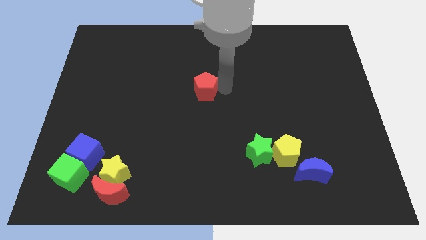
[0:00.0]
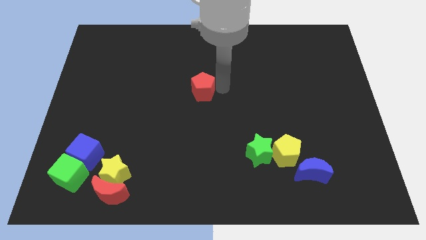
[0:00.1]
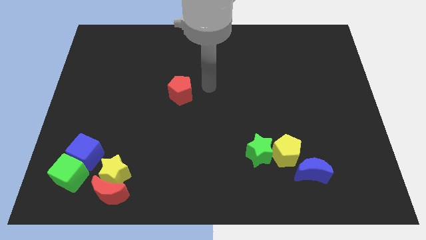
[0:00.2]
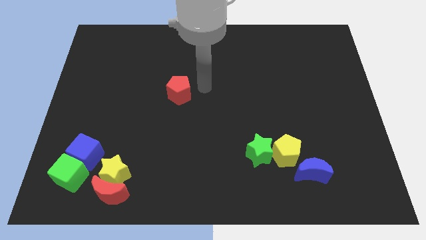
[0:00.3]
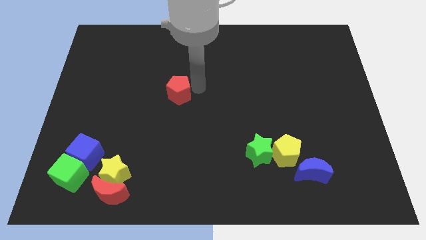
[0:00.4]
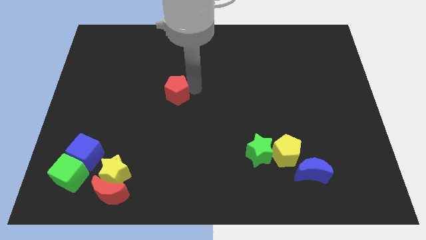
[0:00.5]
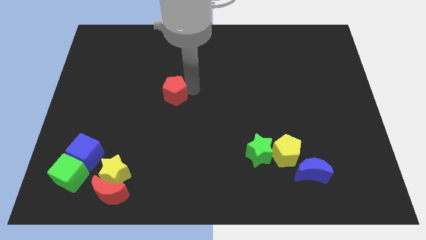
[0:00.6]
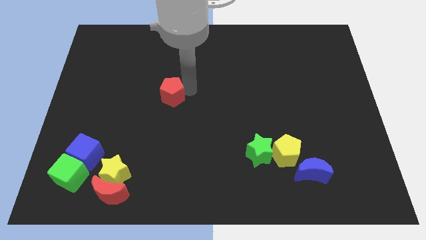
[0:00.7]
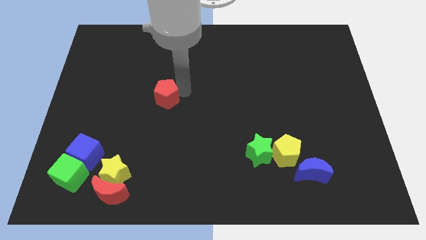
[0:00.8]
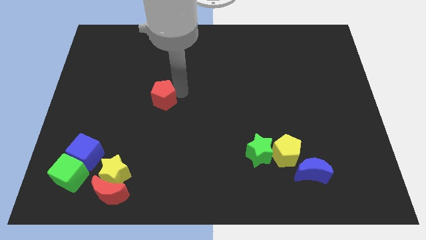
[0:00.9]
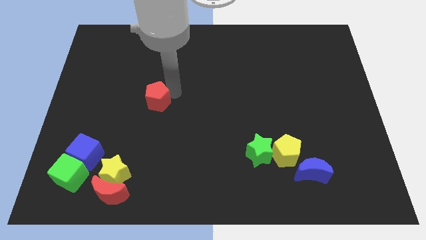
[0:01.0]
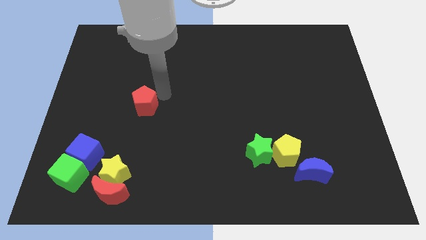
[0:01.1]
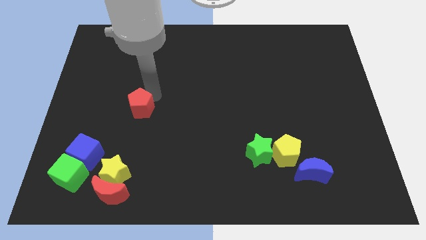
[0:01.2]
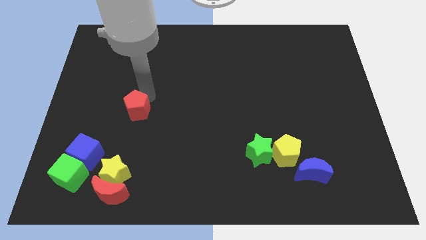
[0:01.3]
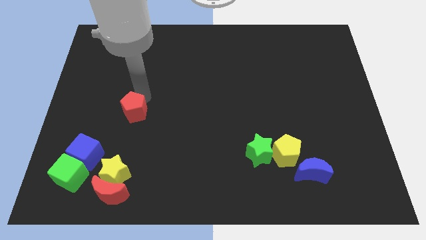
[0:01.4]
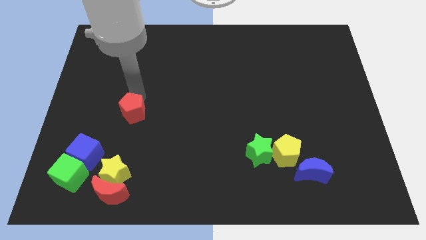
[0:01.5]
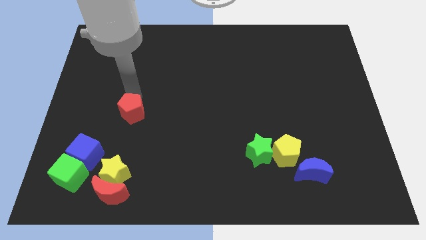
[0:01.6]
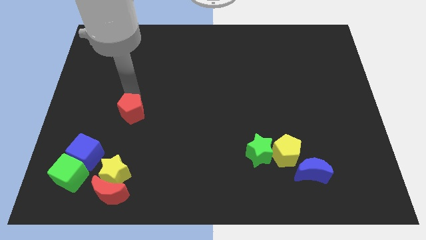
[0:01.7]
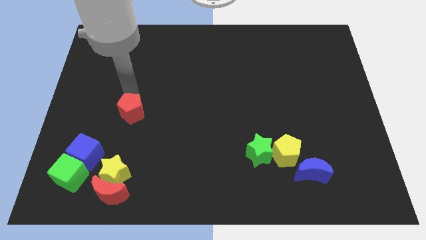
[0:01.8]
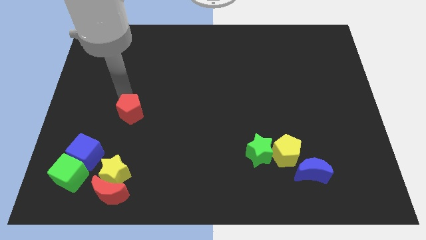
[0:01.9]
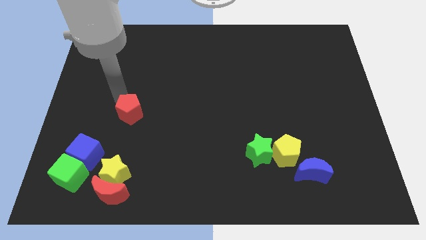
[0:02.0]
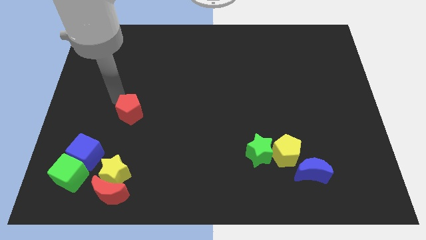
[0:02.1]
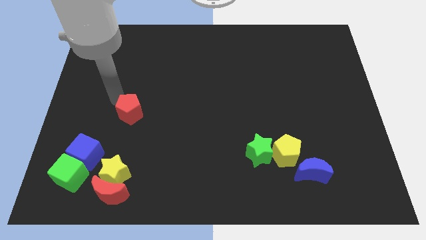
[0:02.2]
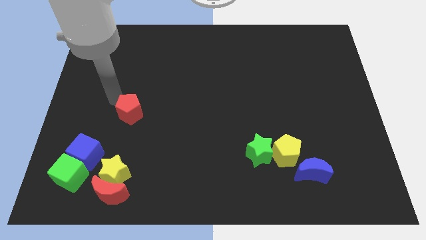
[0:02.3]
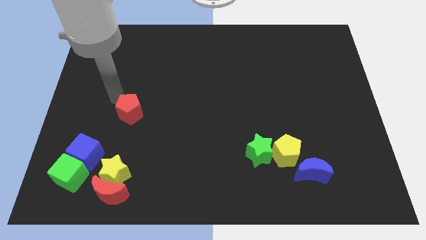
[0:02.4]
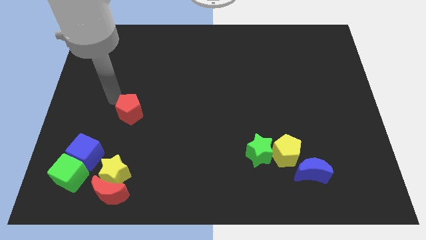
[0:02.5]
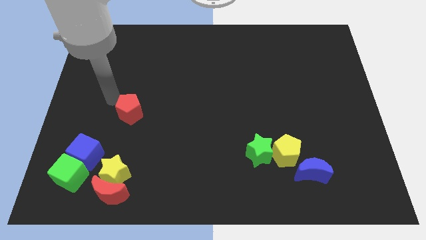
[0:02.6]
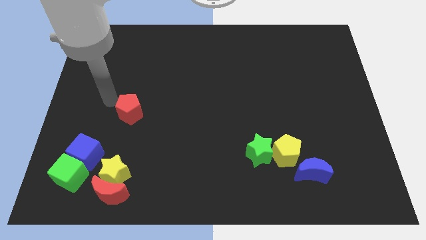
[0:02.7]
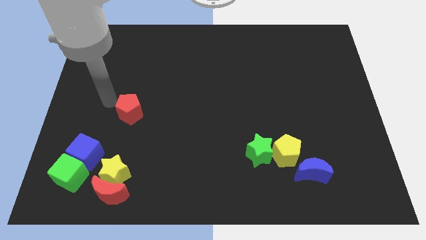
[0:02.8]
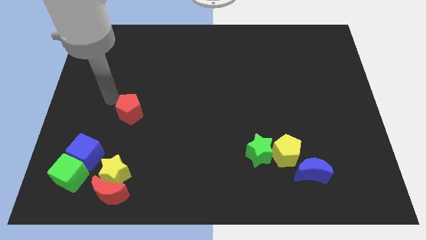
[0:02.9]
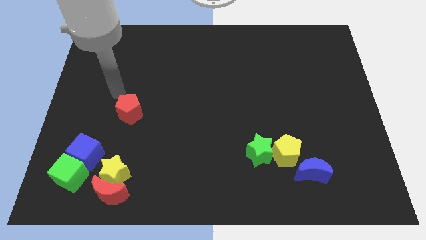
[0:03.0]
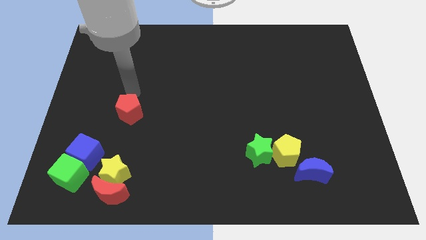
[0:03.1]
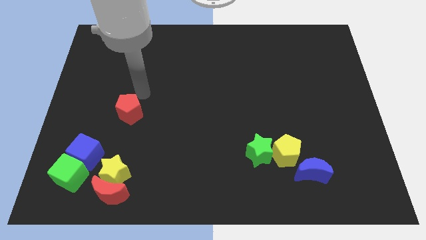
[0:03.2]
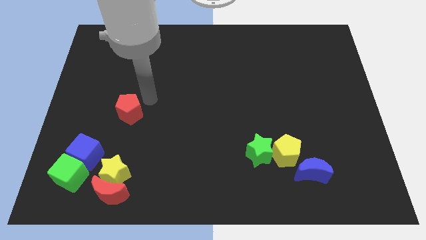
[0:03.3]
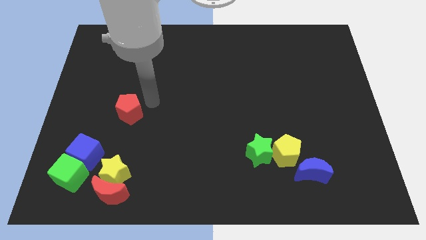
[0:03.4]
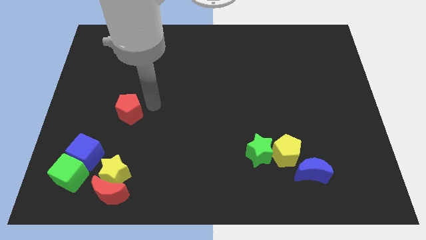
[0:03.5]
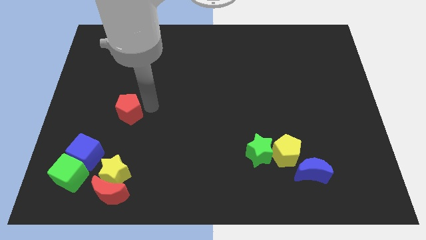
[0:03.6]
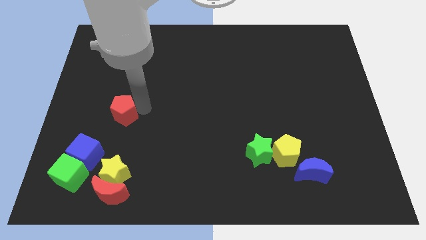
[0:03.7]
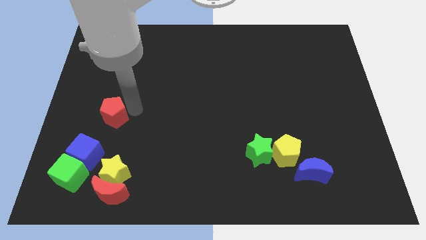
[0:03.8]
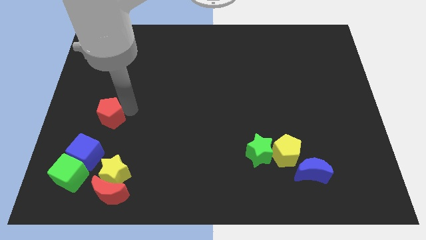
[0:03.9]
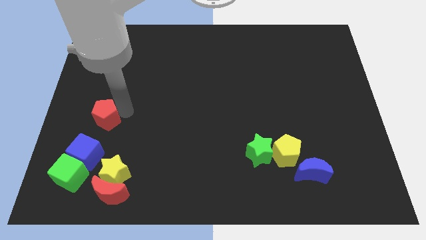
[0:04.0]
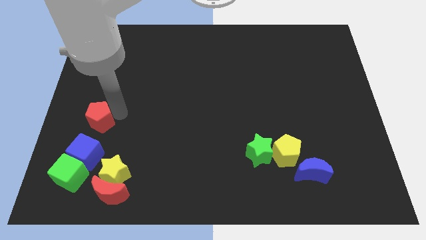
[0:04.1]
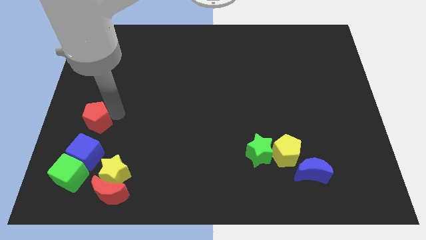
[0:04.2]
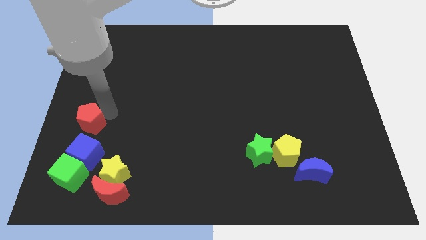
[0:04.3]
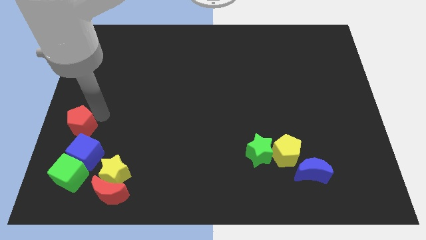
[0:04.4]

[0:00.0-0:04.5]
push the red pentagon to the top of the blue cube

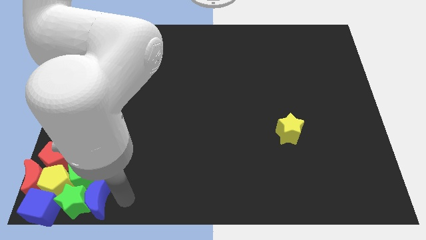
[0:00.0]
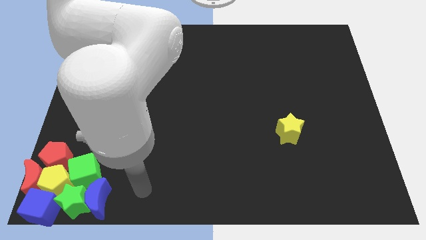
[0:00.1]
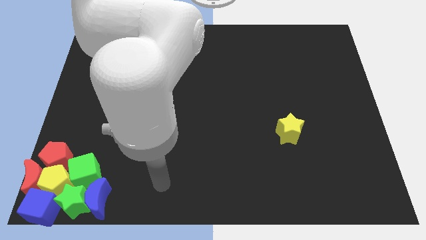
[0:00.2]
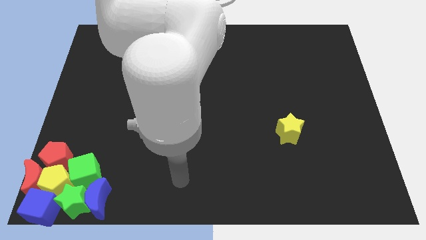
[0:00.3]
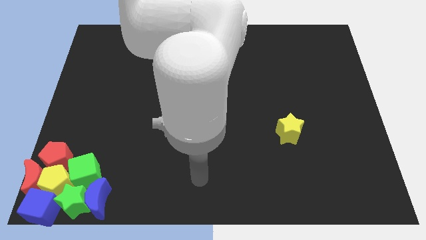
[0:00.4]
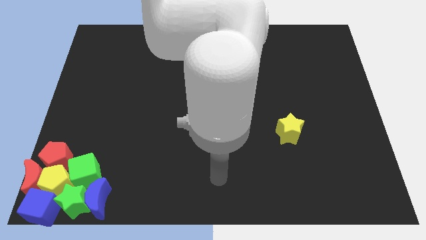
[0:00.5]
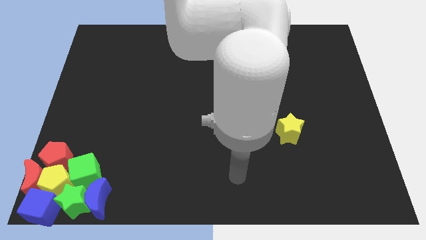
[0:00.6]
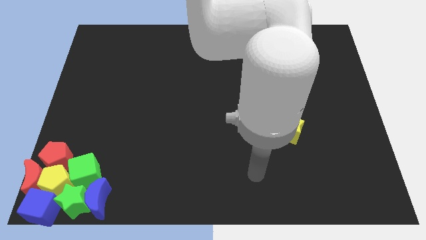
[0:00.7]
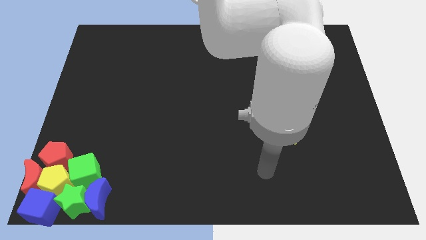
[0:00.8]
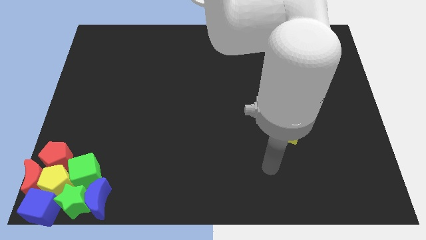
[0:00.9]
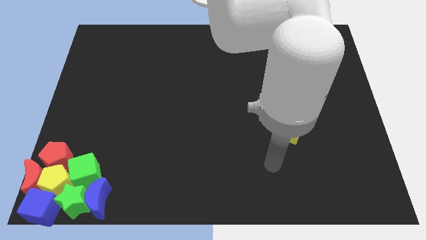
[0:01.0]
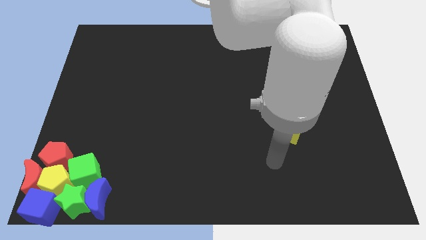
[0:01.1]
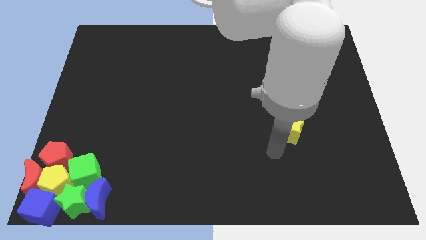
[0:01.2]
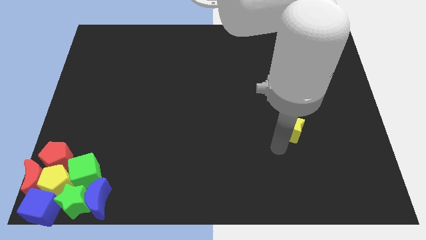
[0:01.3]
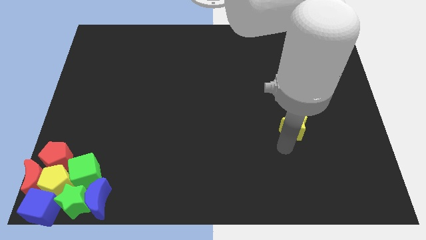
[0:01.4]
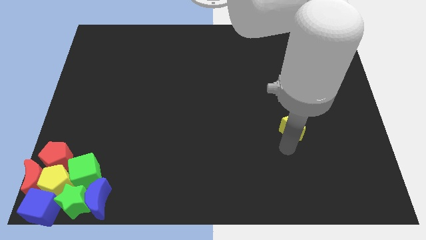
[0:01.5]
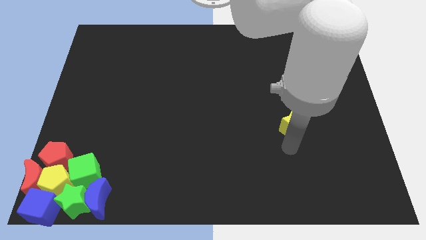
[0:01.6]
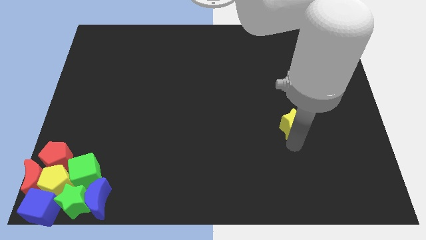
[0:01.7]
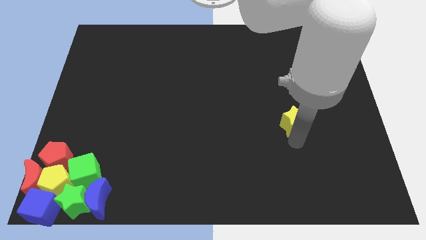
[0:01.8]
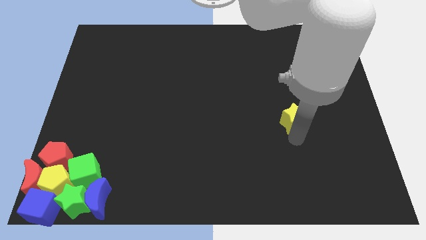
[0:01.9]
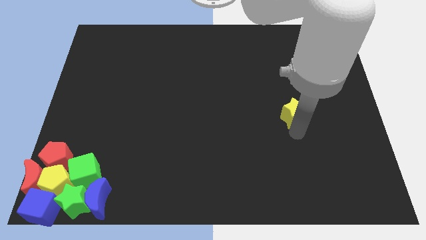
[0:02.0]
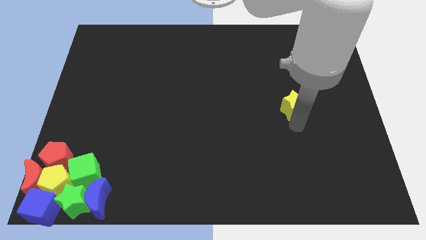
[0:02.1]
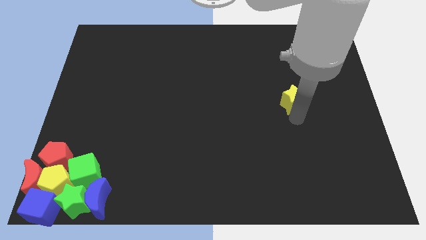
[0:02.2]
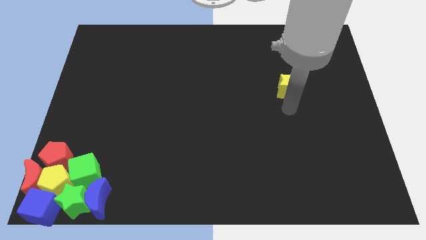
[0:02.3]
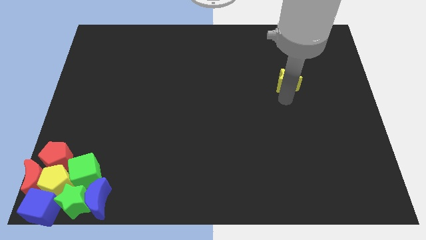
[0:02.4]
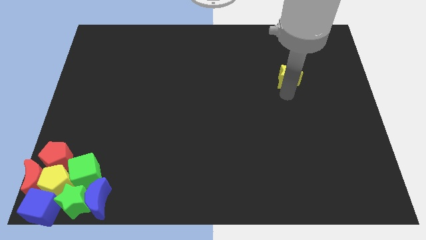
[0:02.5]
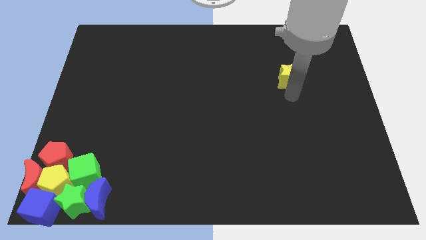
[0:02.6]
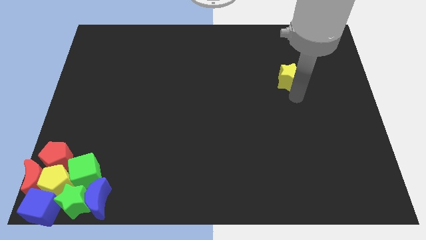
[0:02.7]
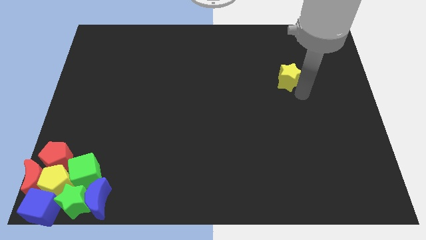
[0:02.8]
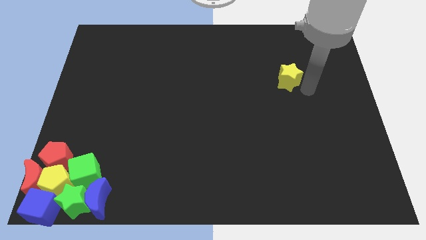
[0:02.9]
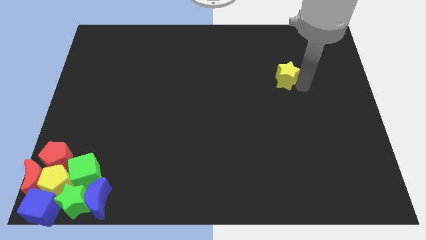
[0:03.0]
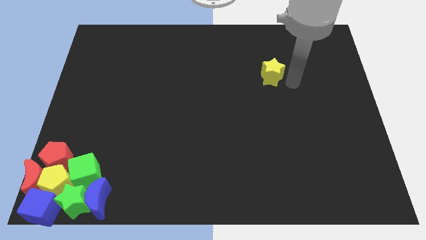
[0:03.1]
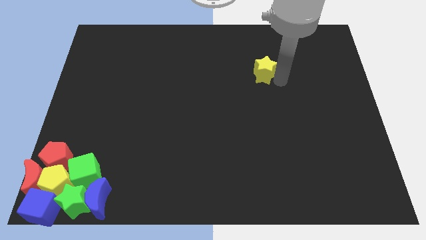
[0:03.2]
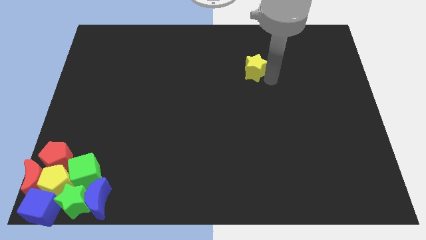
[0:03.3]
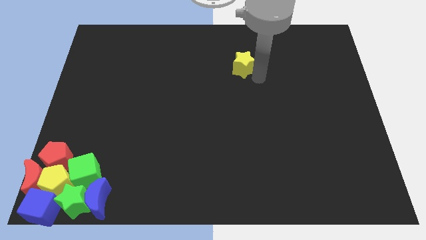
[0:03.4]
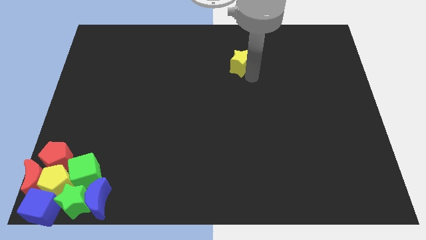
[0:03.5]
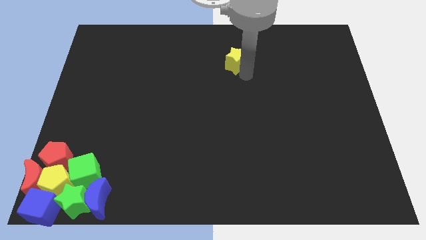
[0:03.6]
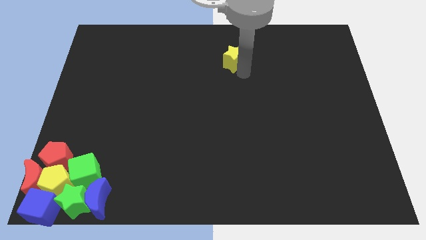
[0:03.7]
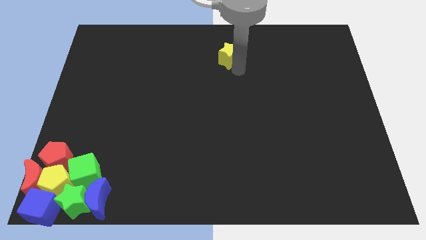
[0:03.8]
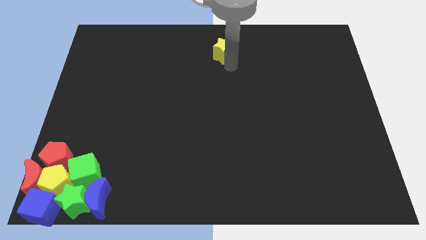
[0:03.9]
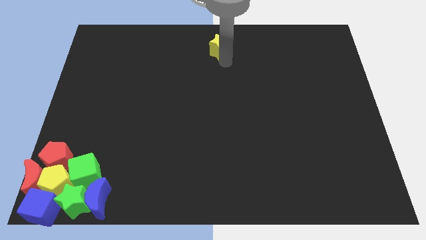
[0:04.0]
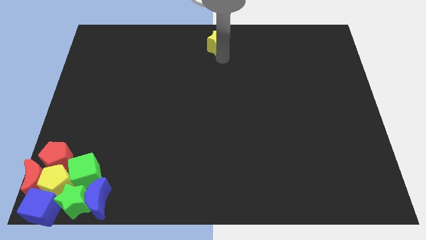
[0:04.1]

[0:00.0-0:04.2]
move the yellow star near to the top center of the board

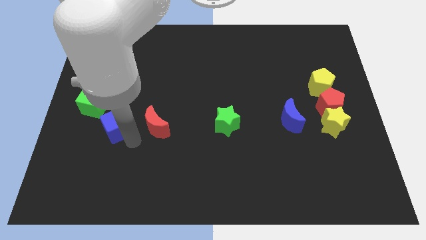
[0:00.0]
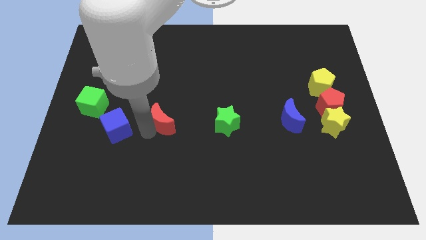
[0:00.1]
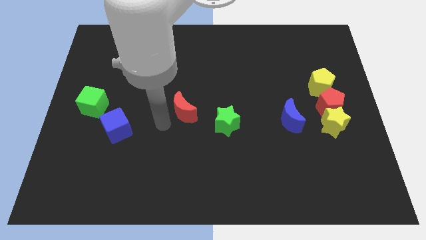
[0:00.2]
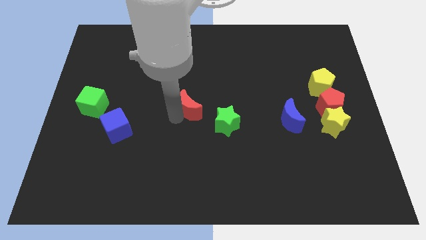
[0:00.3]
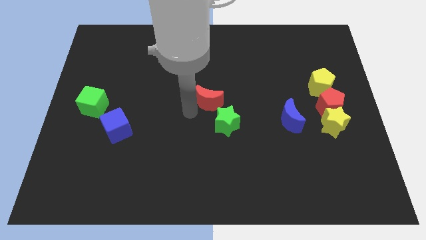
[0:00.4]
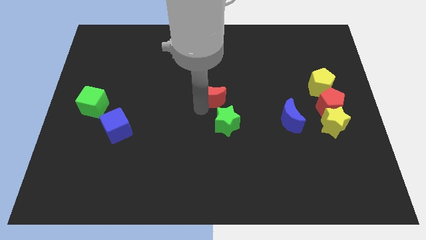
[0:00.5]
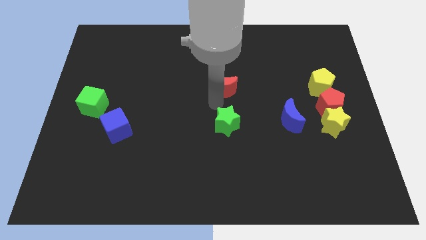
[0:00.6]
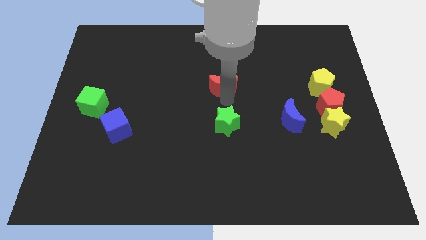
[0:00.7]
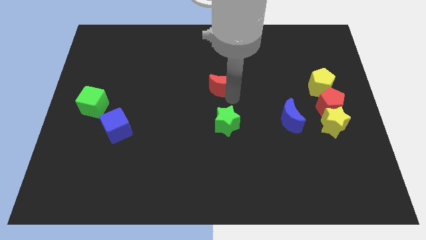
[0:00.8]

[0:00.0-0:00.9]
move the red moon above the green star
